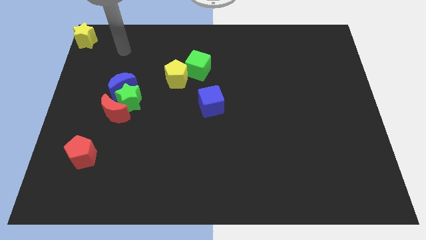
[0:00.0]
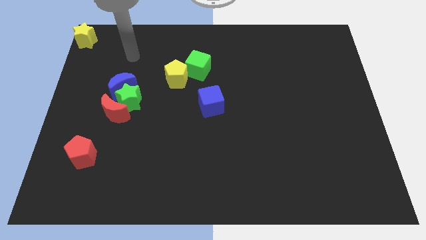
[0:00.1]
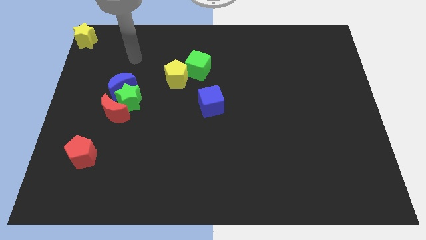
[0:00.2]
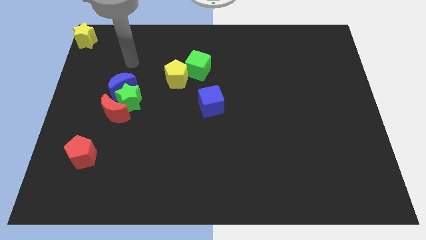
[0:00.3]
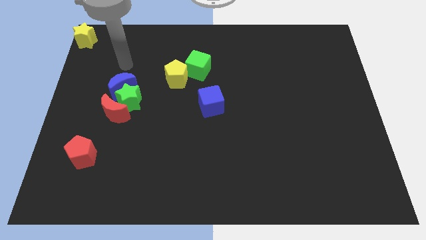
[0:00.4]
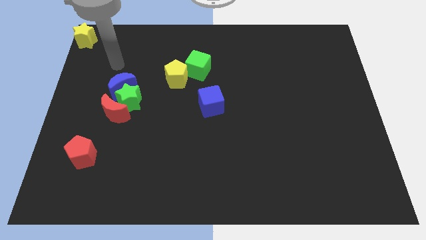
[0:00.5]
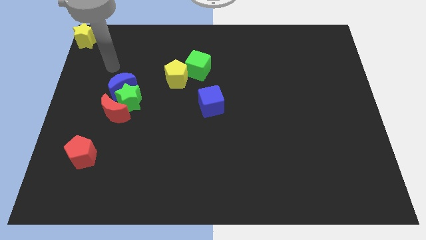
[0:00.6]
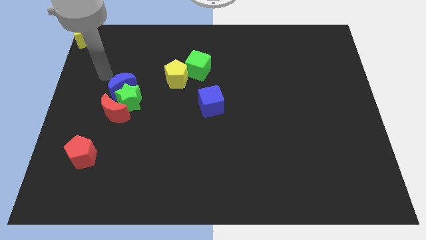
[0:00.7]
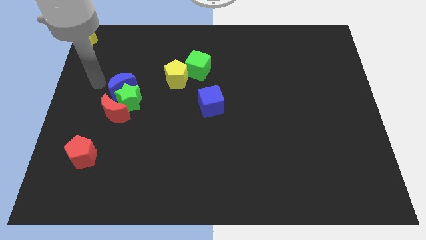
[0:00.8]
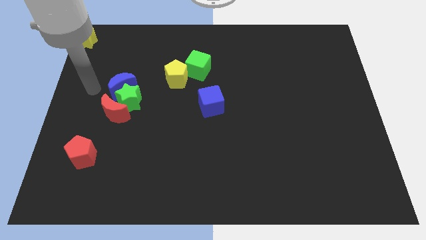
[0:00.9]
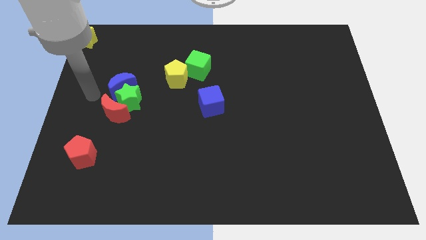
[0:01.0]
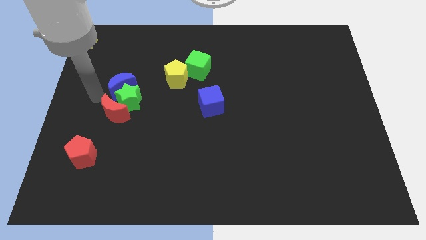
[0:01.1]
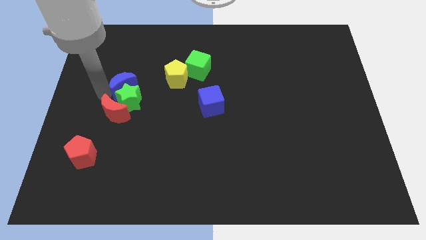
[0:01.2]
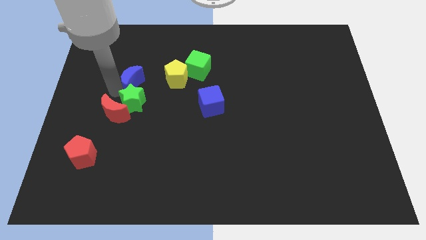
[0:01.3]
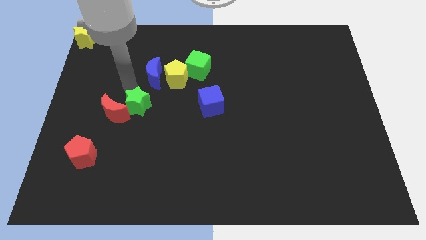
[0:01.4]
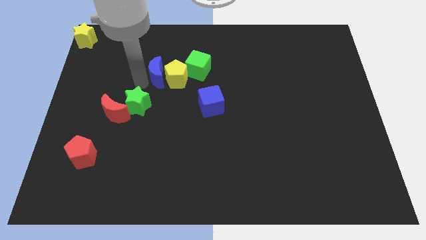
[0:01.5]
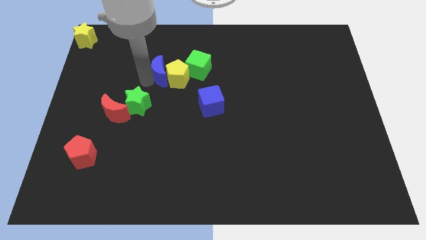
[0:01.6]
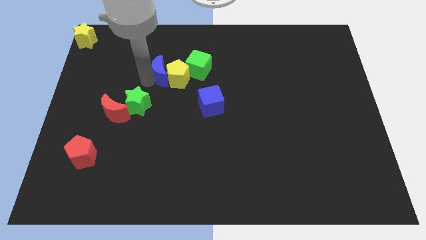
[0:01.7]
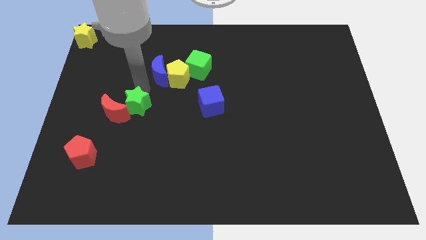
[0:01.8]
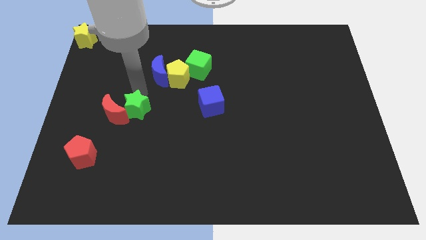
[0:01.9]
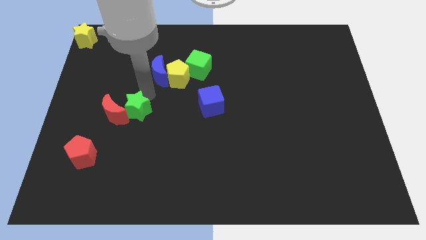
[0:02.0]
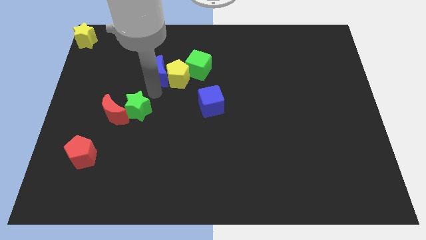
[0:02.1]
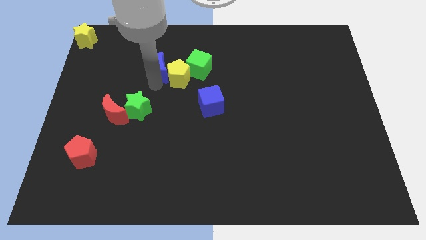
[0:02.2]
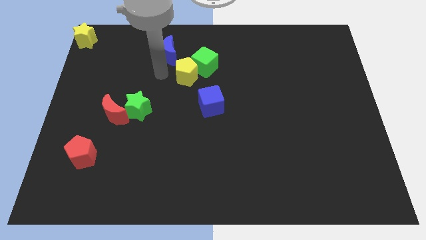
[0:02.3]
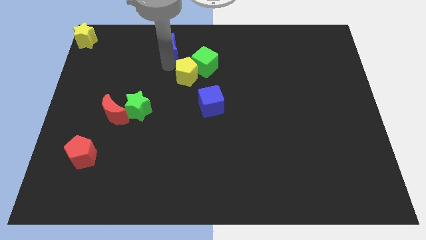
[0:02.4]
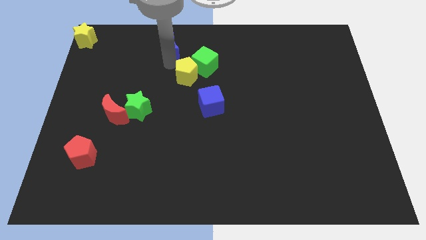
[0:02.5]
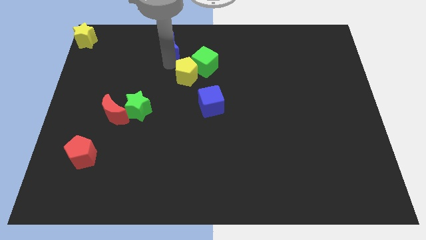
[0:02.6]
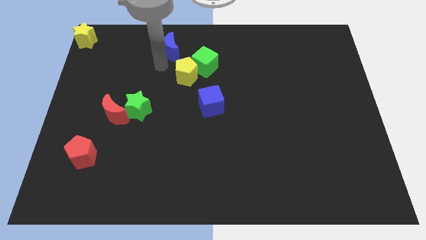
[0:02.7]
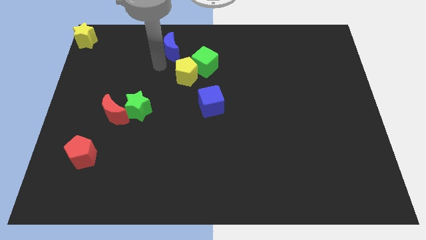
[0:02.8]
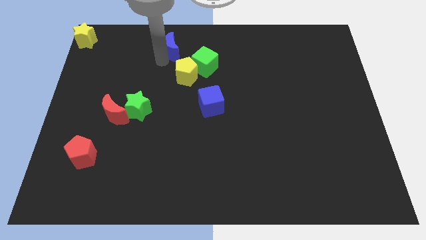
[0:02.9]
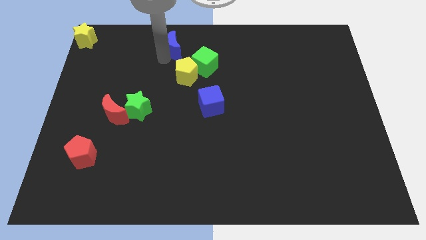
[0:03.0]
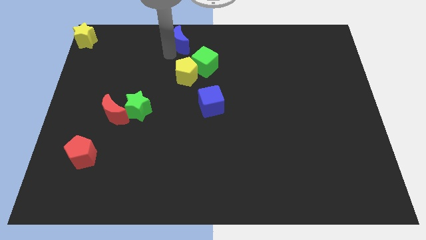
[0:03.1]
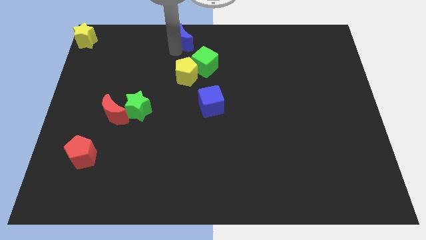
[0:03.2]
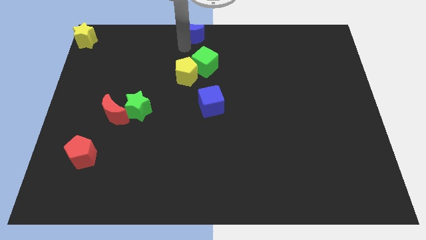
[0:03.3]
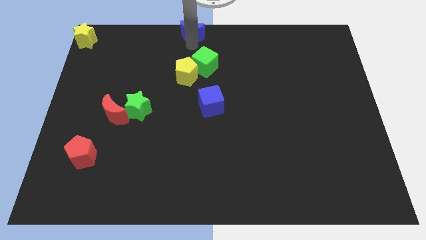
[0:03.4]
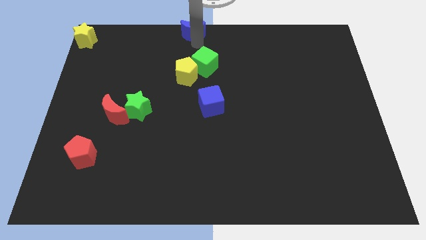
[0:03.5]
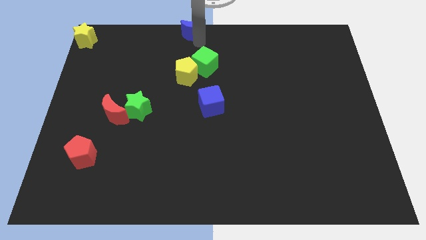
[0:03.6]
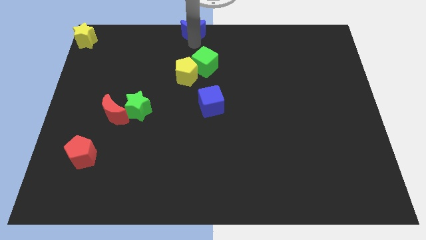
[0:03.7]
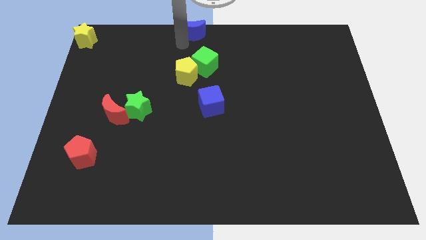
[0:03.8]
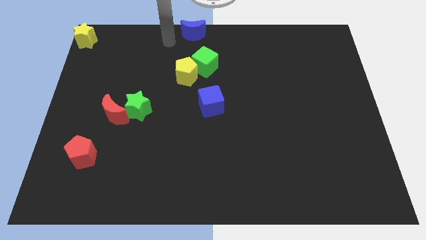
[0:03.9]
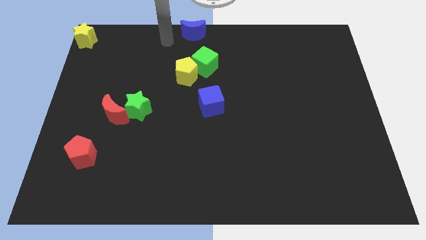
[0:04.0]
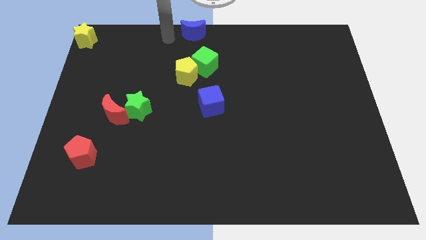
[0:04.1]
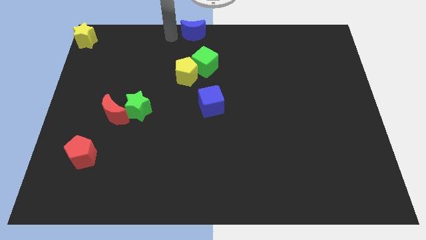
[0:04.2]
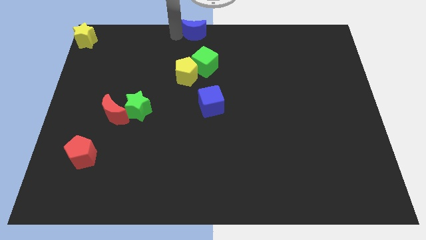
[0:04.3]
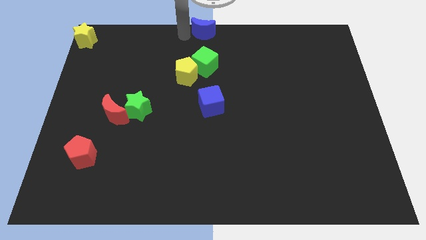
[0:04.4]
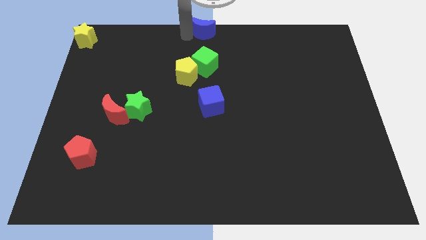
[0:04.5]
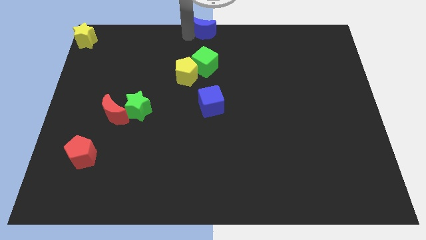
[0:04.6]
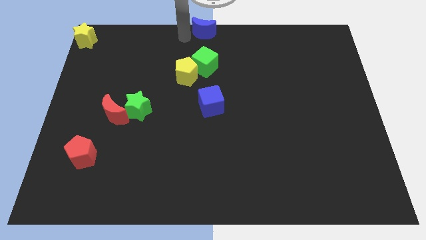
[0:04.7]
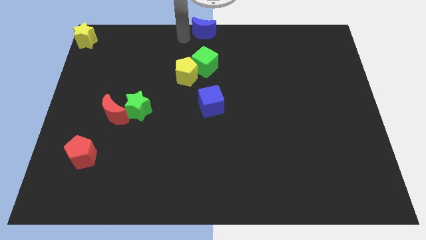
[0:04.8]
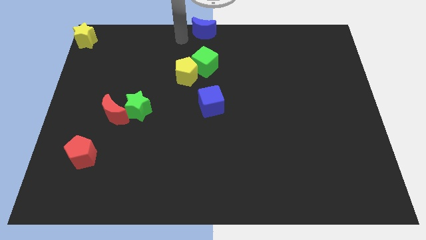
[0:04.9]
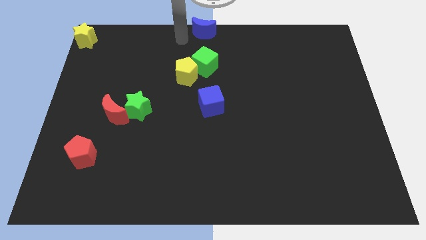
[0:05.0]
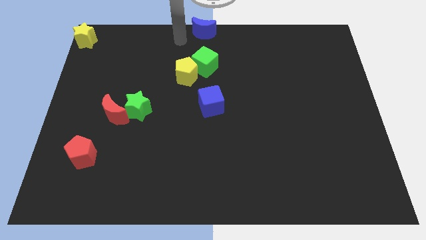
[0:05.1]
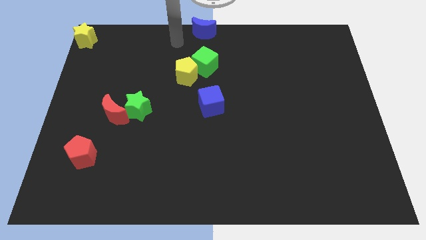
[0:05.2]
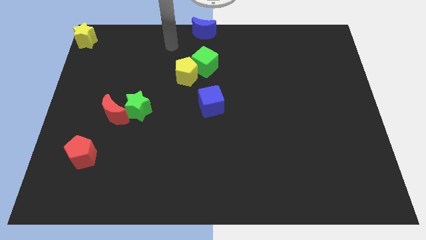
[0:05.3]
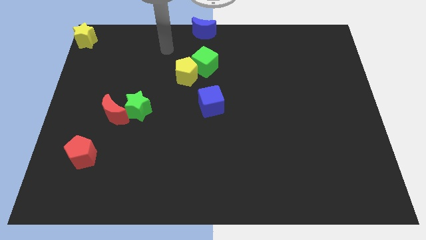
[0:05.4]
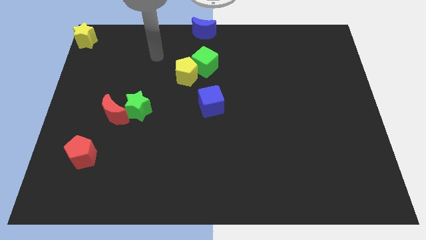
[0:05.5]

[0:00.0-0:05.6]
slide the blue moon to top center of the board

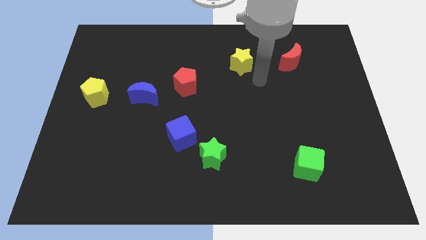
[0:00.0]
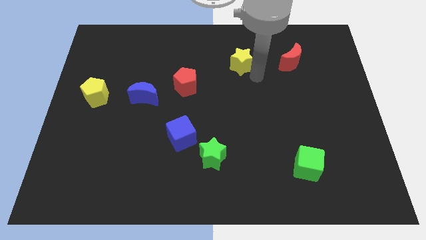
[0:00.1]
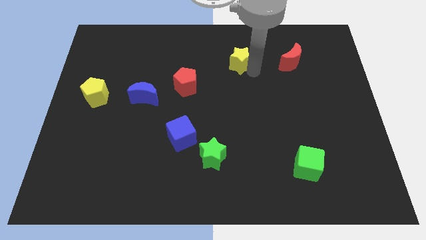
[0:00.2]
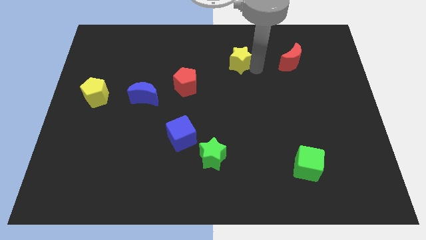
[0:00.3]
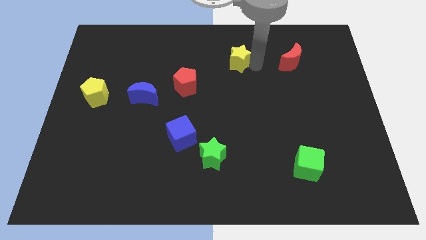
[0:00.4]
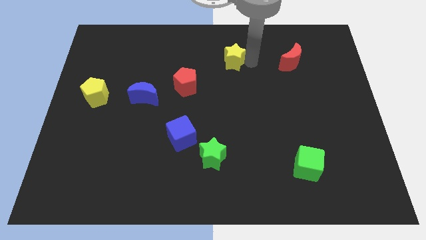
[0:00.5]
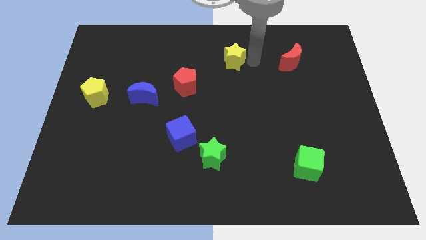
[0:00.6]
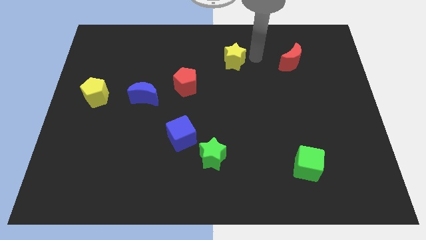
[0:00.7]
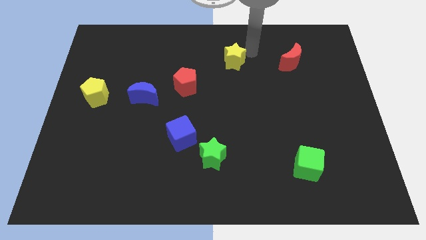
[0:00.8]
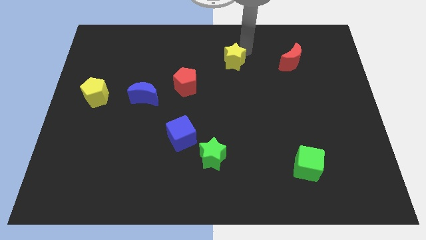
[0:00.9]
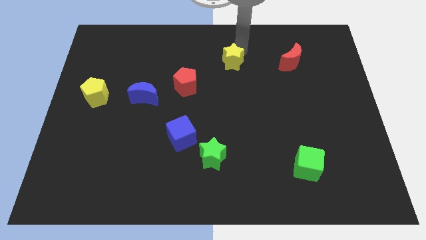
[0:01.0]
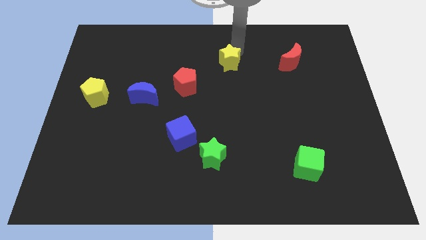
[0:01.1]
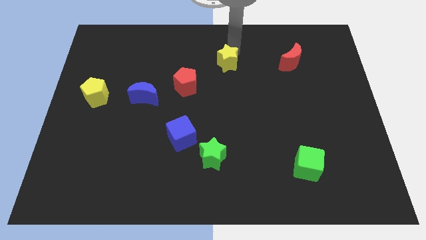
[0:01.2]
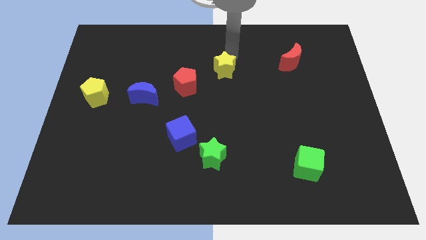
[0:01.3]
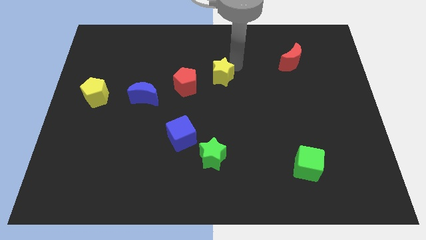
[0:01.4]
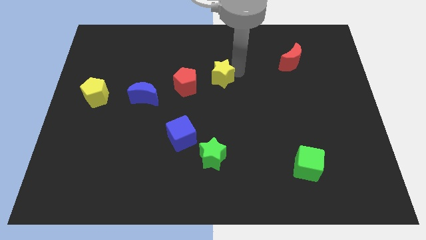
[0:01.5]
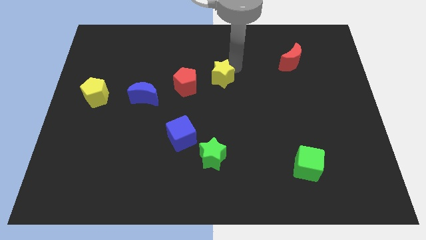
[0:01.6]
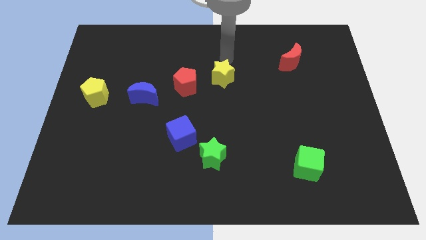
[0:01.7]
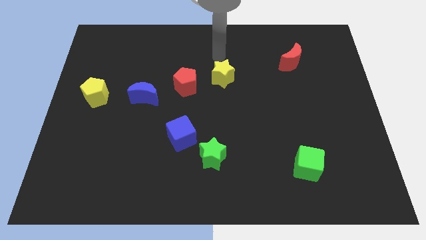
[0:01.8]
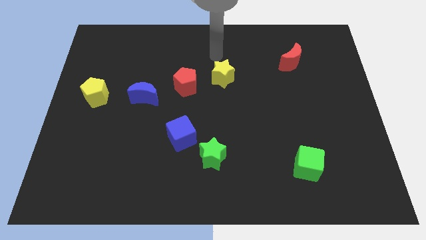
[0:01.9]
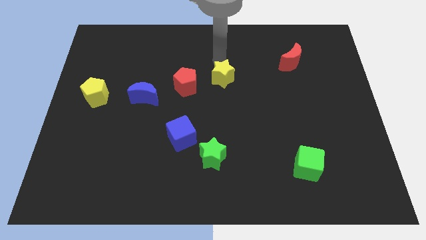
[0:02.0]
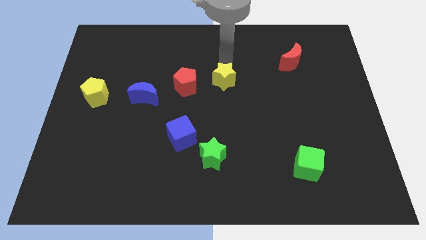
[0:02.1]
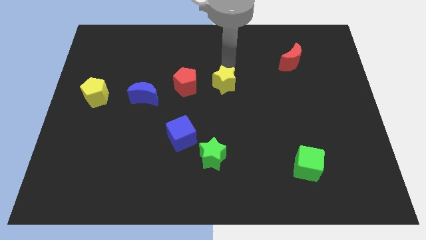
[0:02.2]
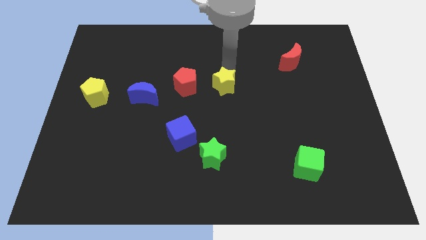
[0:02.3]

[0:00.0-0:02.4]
push the yellow star right to the red pentagon

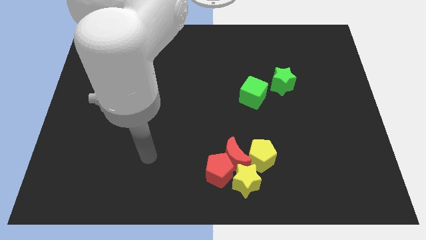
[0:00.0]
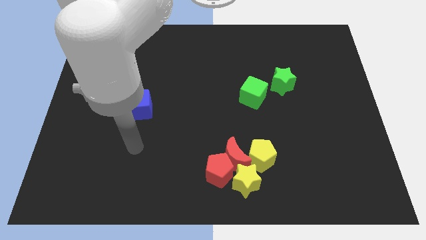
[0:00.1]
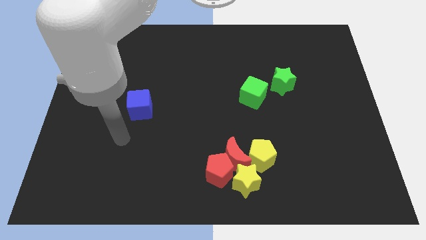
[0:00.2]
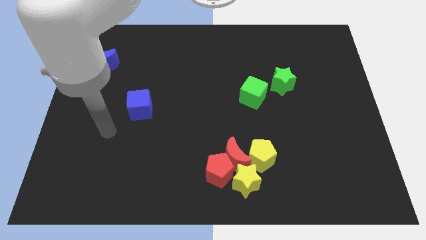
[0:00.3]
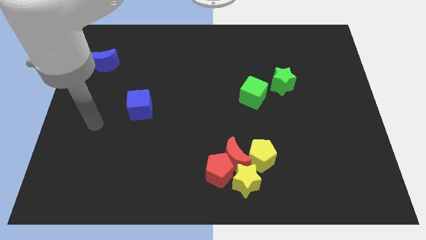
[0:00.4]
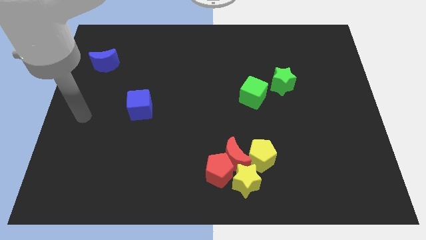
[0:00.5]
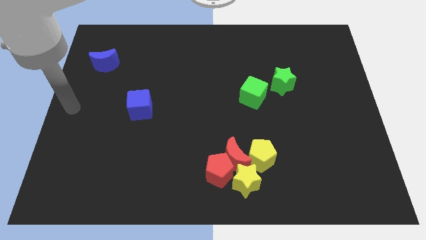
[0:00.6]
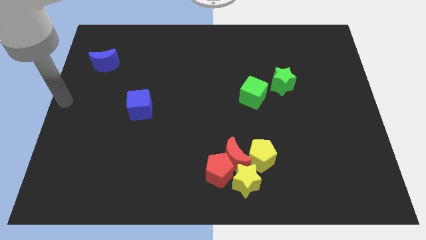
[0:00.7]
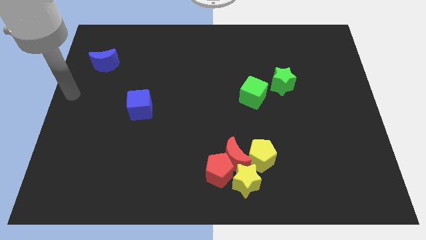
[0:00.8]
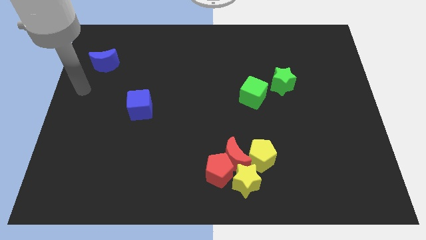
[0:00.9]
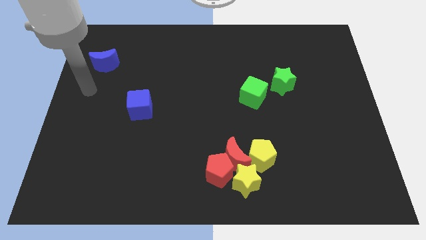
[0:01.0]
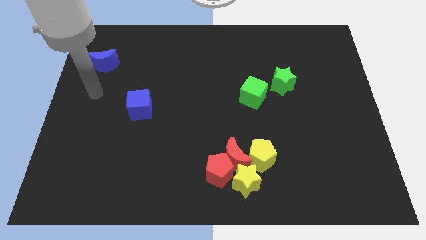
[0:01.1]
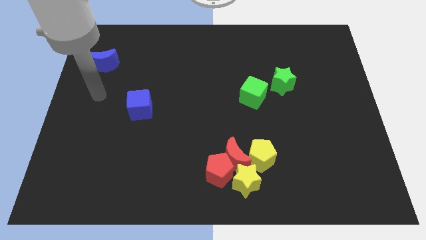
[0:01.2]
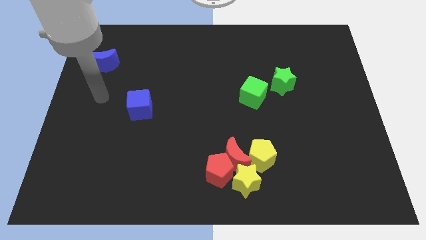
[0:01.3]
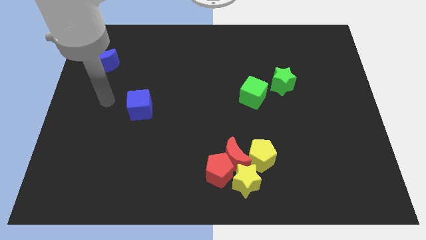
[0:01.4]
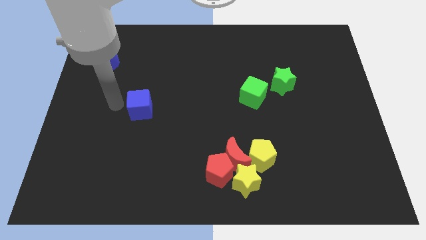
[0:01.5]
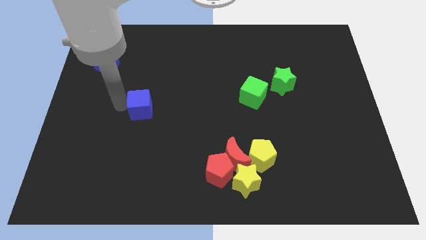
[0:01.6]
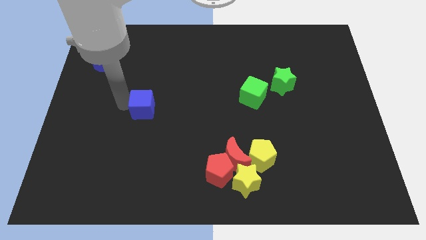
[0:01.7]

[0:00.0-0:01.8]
move the blue cube slightly towards right
